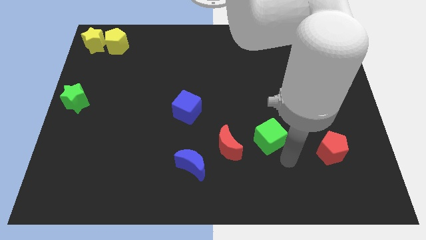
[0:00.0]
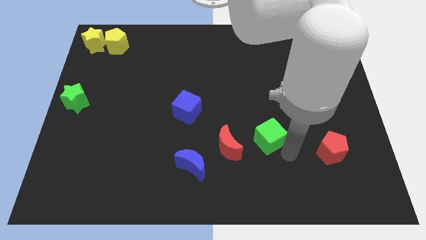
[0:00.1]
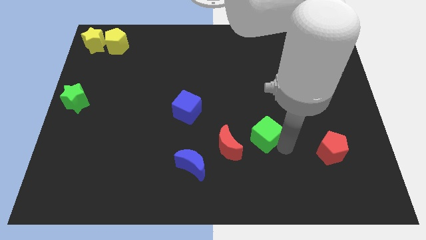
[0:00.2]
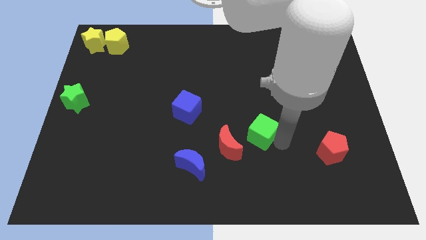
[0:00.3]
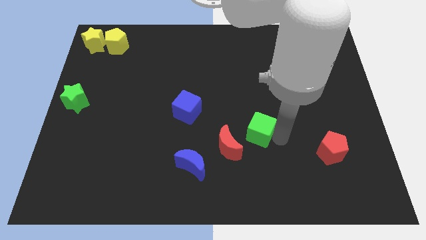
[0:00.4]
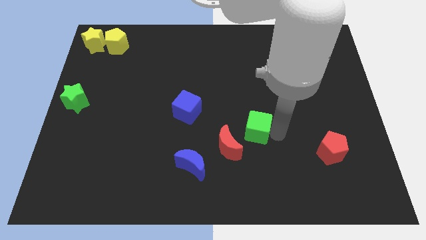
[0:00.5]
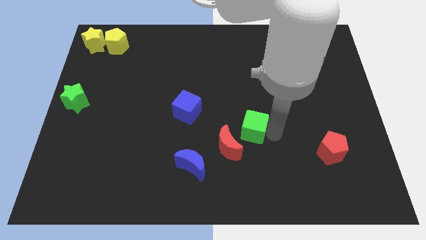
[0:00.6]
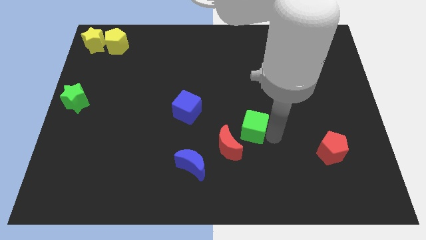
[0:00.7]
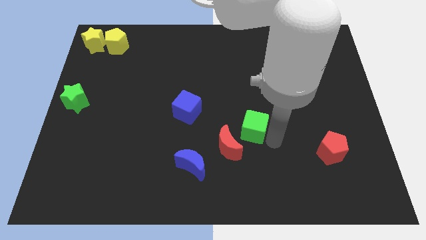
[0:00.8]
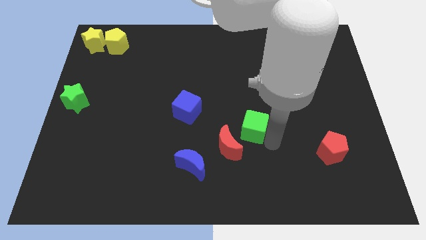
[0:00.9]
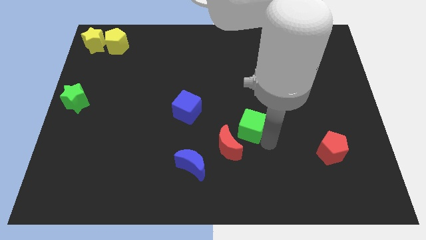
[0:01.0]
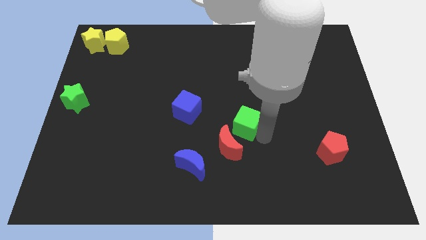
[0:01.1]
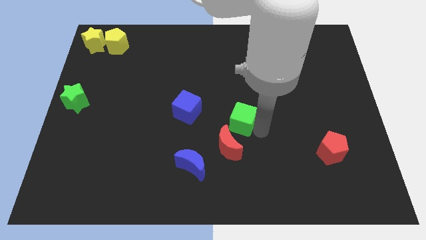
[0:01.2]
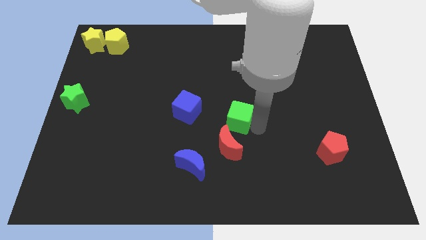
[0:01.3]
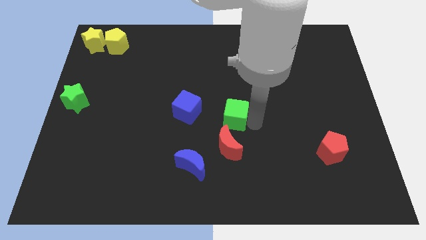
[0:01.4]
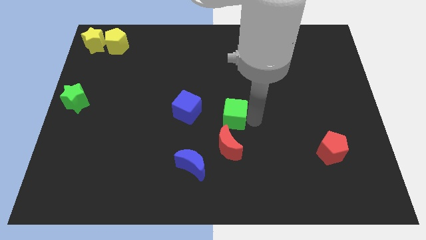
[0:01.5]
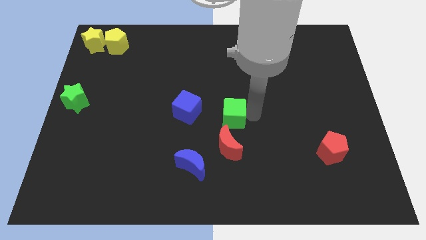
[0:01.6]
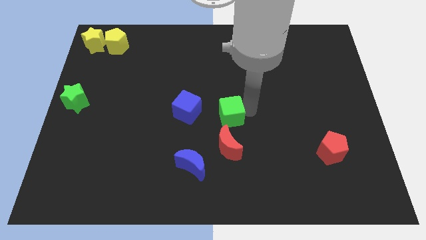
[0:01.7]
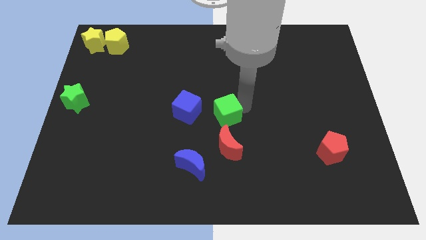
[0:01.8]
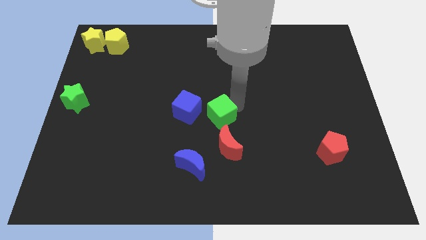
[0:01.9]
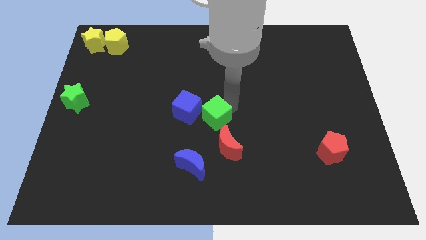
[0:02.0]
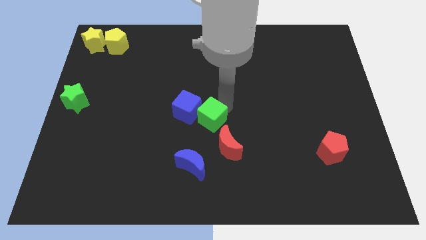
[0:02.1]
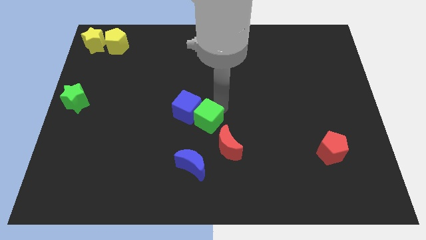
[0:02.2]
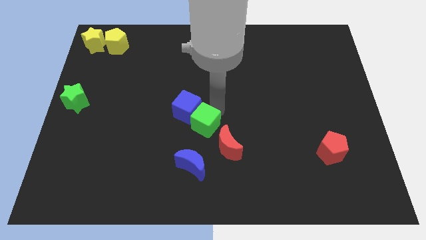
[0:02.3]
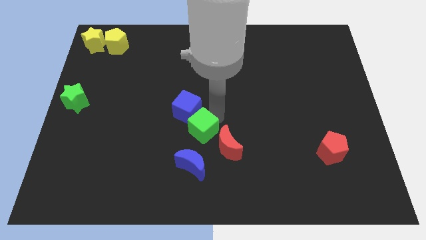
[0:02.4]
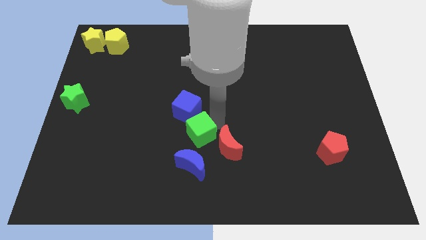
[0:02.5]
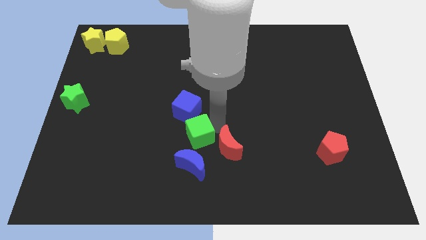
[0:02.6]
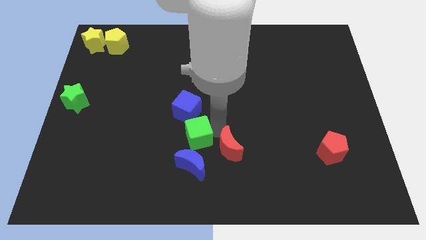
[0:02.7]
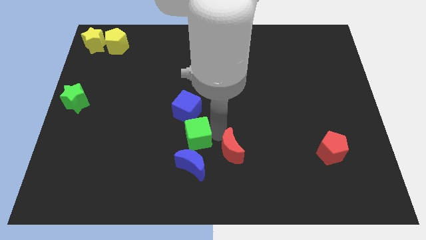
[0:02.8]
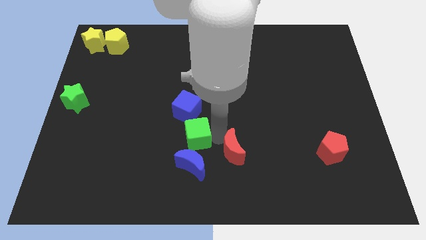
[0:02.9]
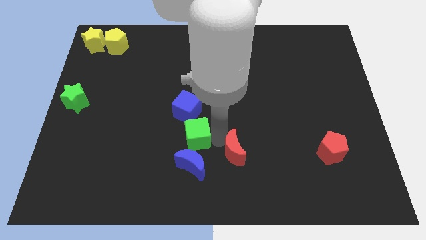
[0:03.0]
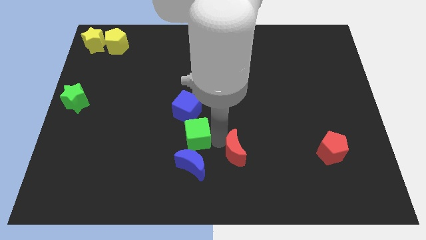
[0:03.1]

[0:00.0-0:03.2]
push the green cube in between the blue blocks

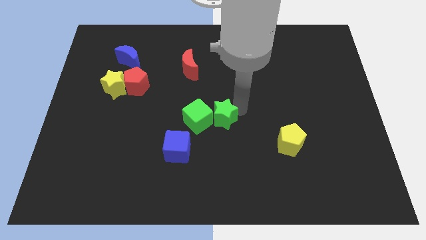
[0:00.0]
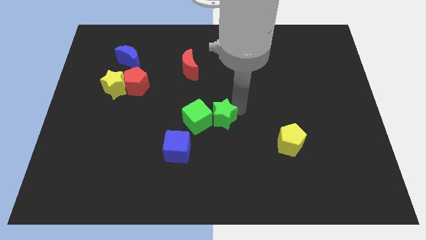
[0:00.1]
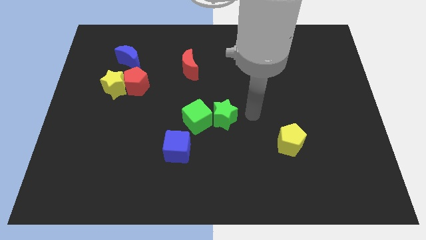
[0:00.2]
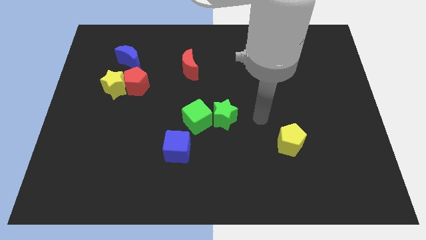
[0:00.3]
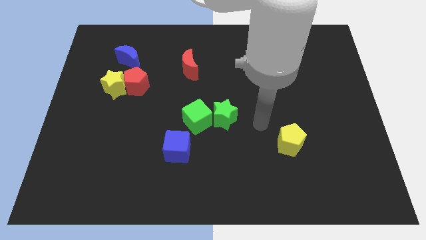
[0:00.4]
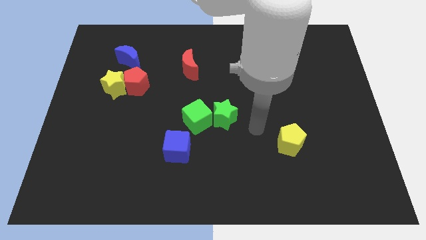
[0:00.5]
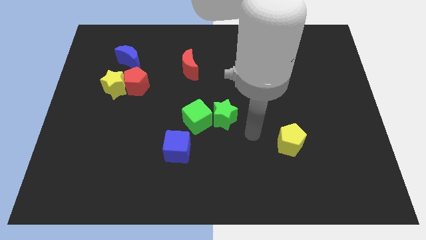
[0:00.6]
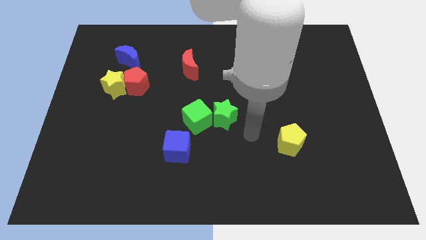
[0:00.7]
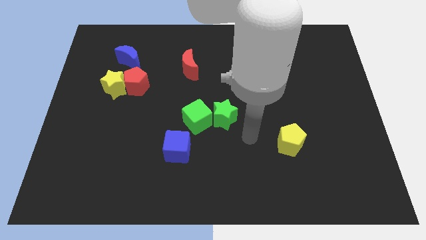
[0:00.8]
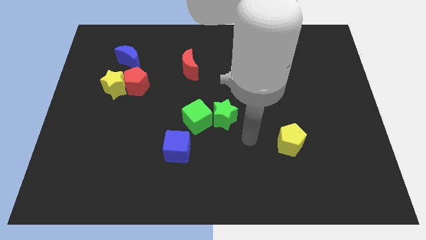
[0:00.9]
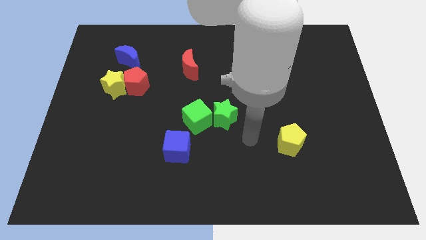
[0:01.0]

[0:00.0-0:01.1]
move your arm away from green star

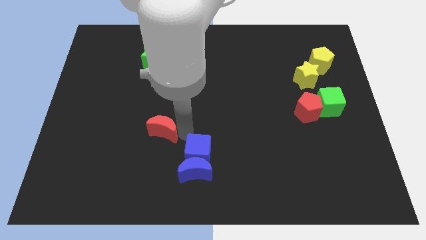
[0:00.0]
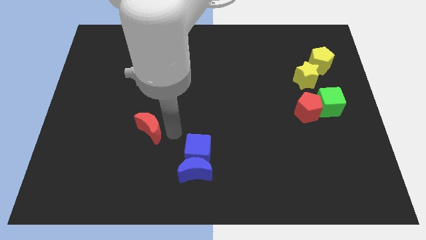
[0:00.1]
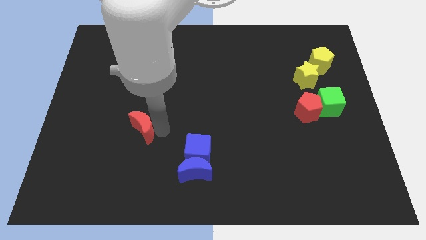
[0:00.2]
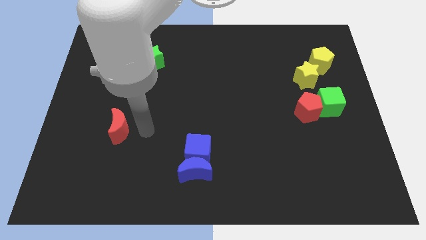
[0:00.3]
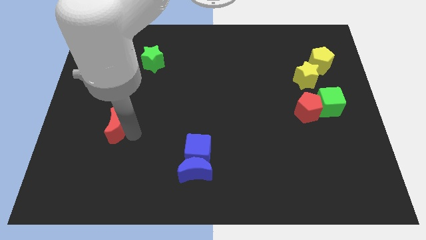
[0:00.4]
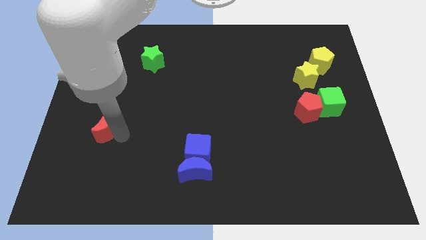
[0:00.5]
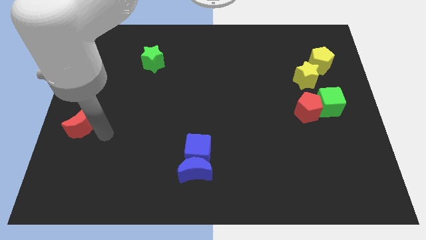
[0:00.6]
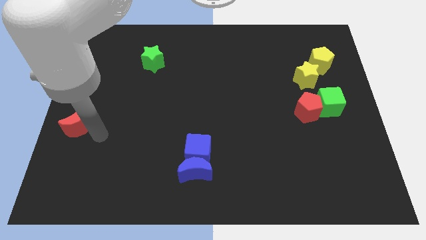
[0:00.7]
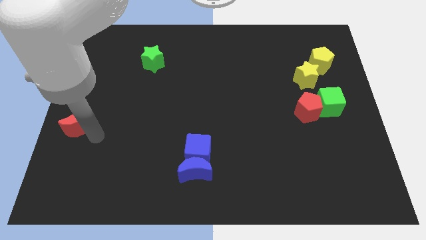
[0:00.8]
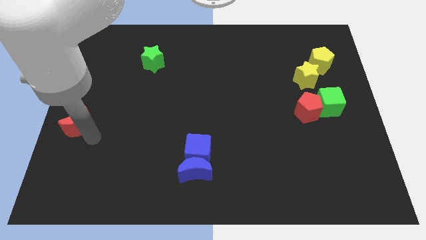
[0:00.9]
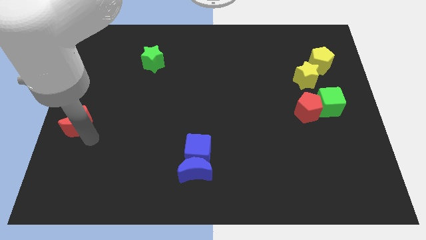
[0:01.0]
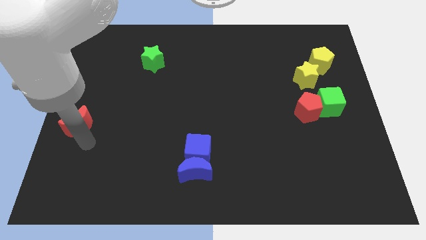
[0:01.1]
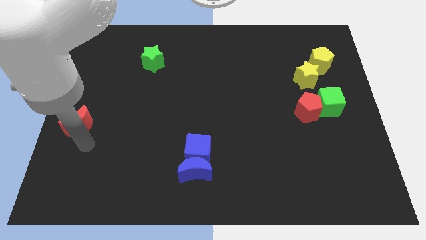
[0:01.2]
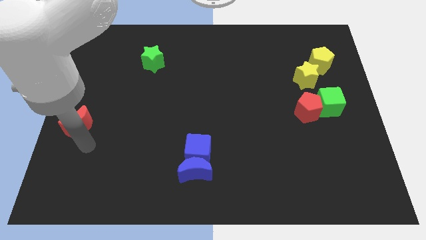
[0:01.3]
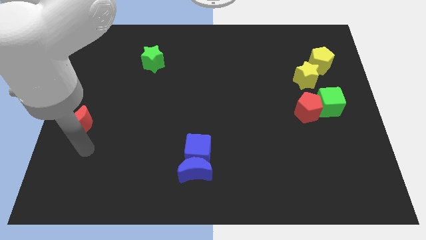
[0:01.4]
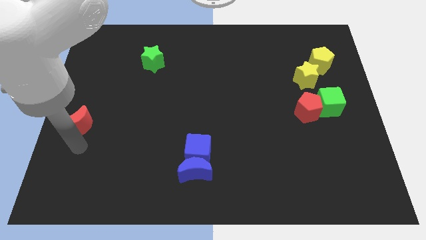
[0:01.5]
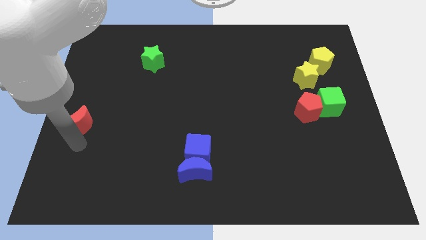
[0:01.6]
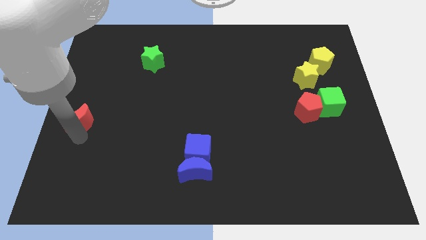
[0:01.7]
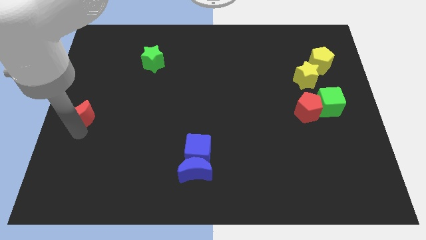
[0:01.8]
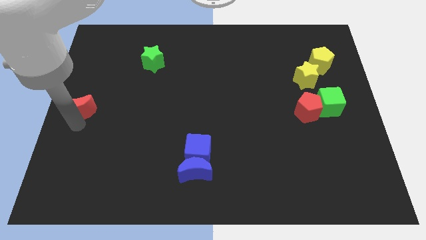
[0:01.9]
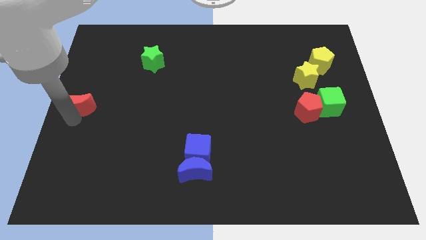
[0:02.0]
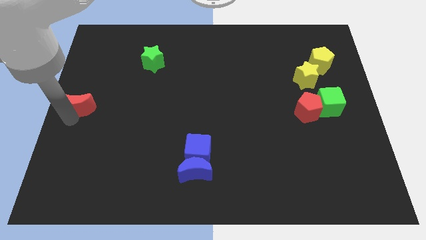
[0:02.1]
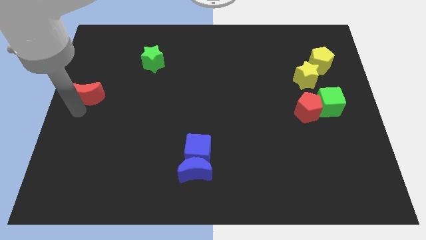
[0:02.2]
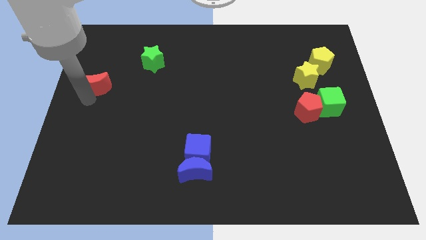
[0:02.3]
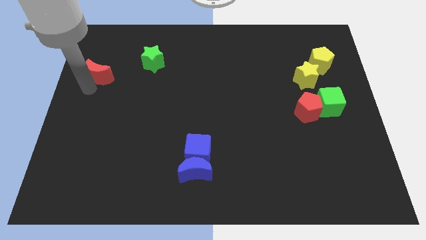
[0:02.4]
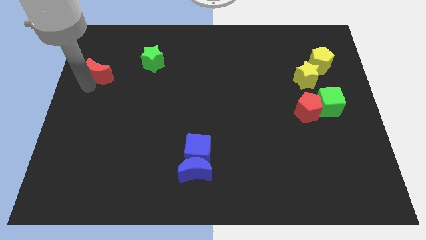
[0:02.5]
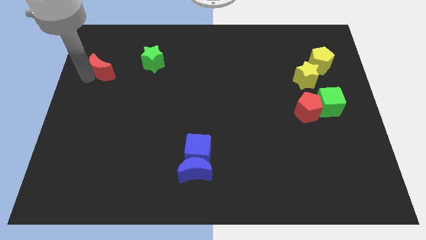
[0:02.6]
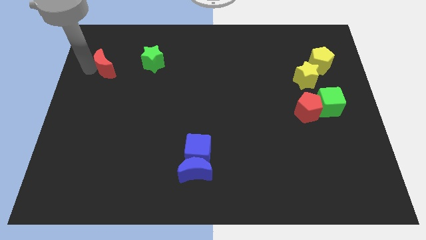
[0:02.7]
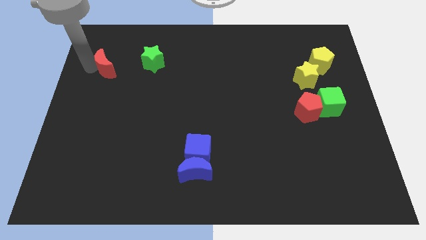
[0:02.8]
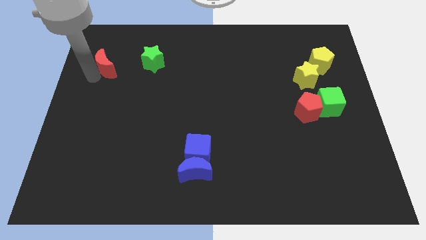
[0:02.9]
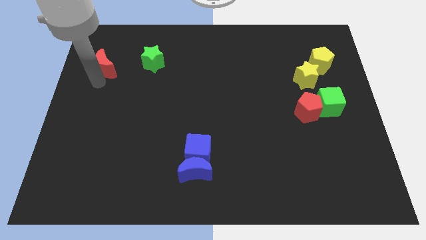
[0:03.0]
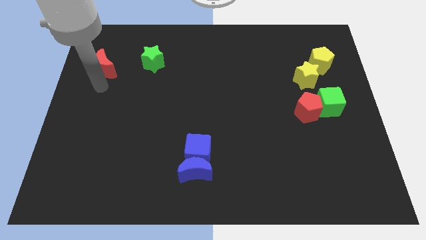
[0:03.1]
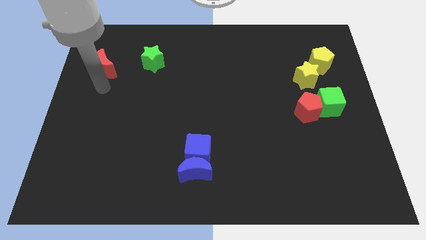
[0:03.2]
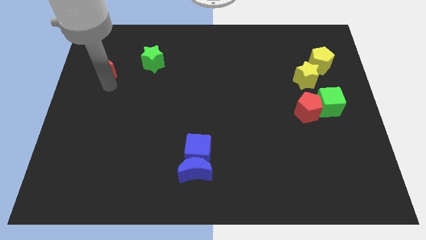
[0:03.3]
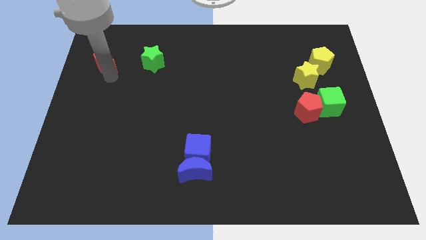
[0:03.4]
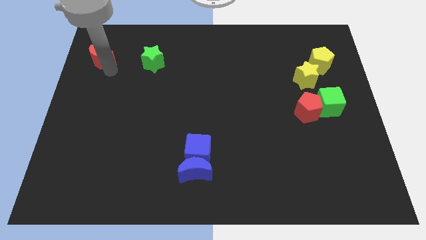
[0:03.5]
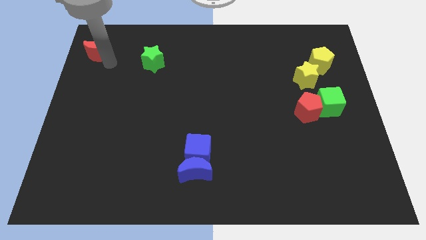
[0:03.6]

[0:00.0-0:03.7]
place red moon to the left of green star

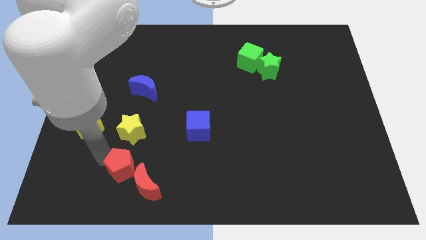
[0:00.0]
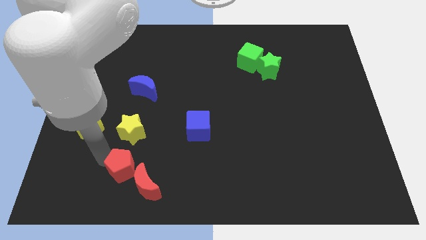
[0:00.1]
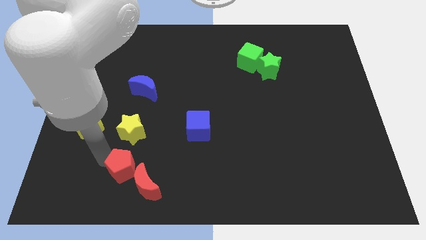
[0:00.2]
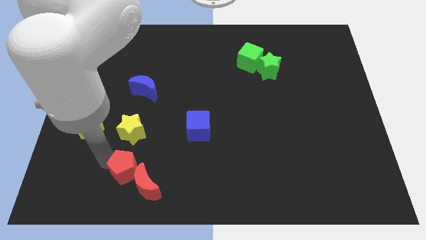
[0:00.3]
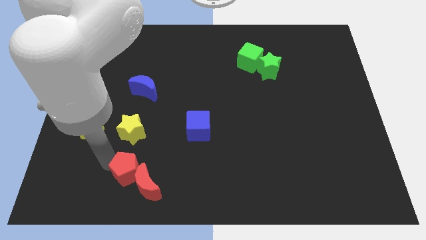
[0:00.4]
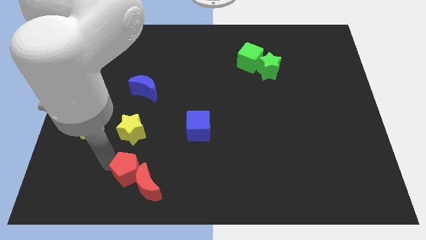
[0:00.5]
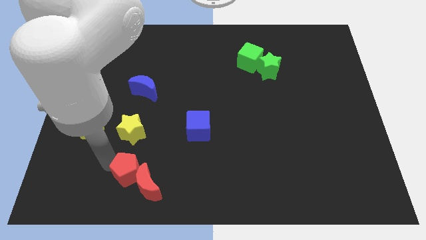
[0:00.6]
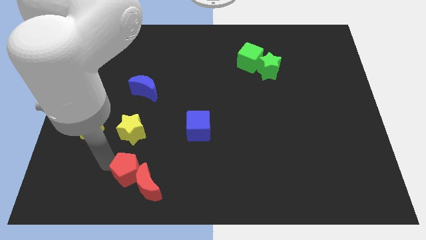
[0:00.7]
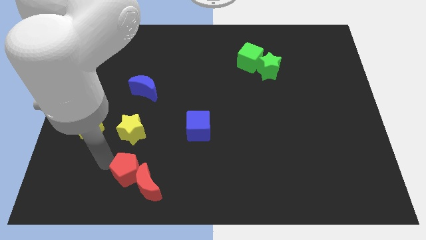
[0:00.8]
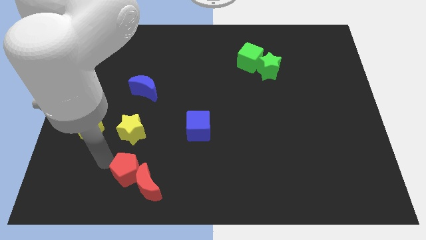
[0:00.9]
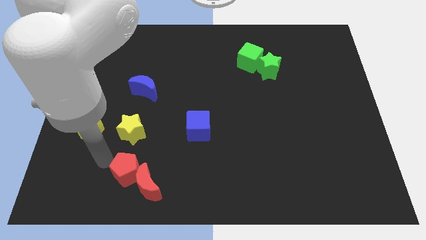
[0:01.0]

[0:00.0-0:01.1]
push the red pentagon into the red crescent diagonally
